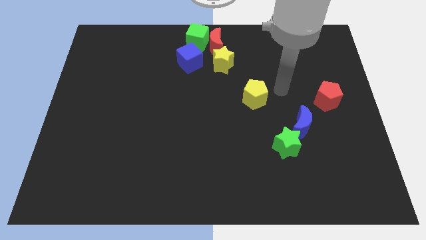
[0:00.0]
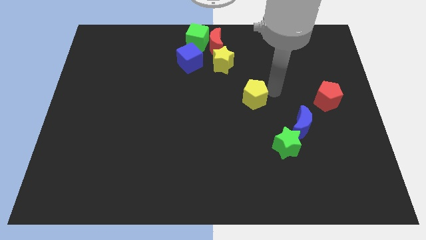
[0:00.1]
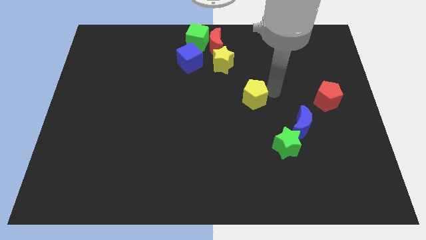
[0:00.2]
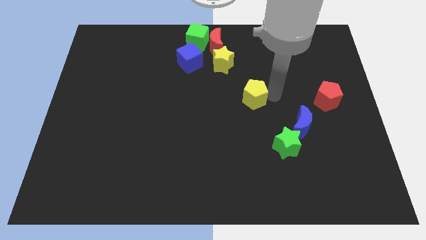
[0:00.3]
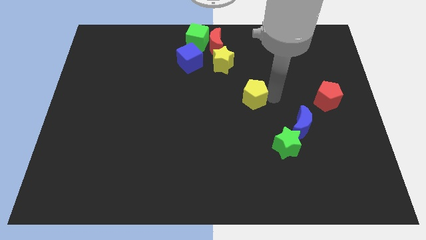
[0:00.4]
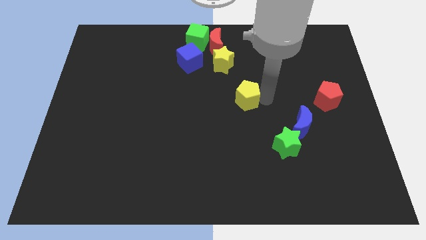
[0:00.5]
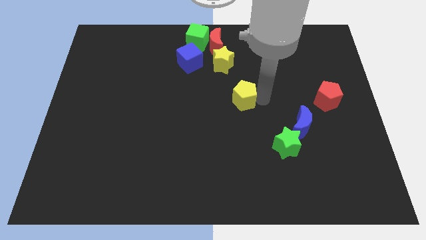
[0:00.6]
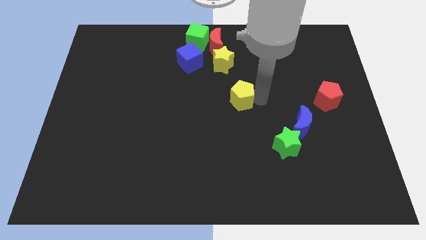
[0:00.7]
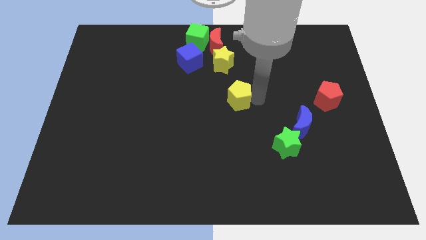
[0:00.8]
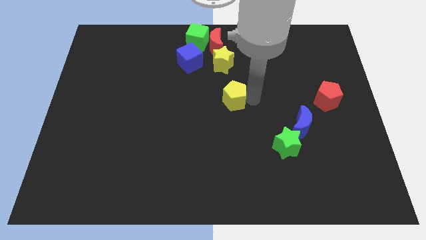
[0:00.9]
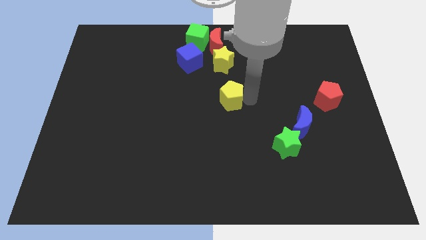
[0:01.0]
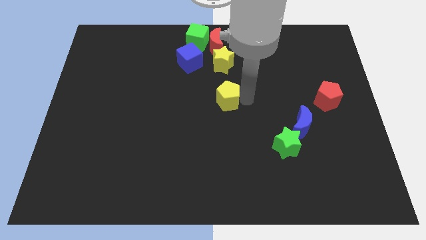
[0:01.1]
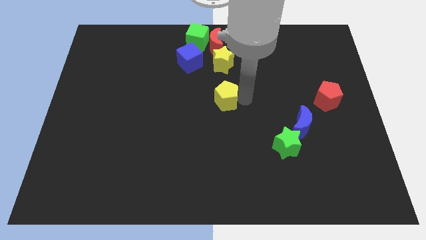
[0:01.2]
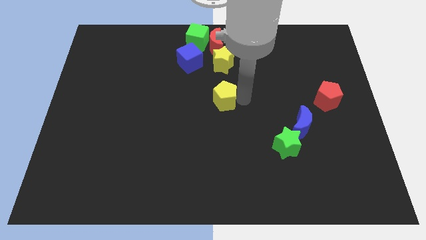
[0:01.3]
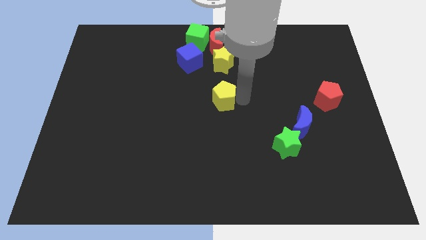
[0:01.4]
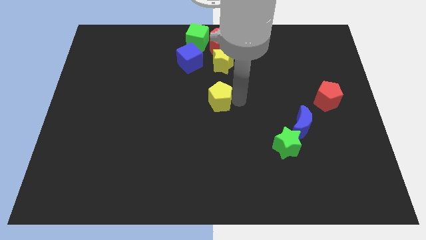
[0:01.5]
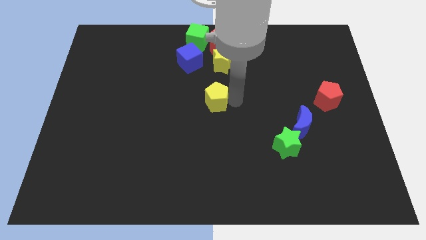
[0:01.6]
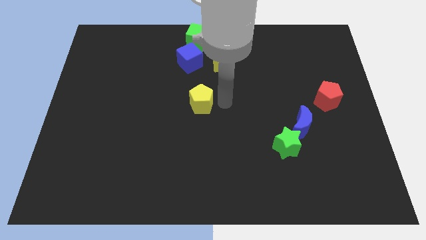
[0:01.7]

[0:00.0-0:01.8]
place yellow pentagon to the bottom of the yellow star

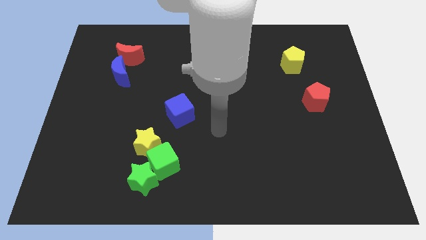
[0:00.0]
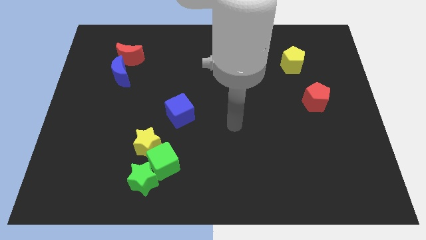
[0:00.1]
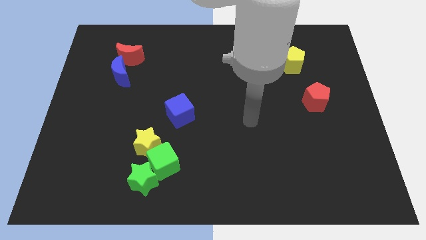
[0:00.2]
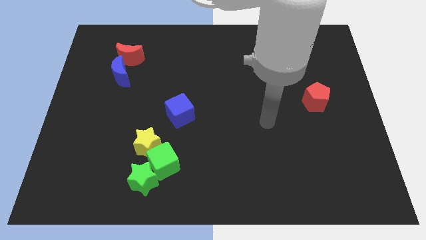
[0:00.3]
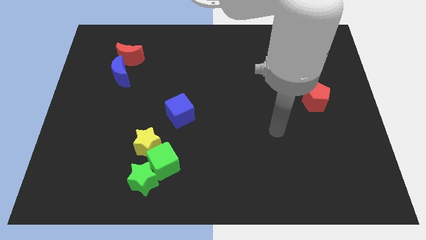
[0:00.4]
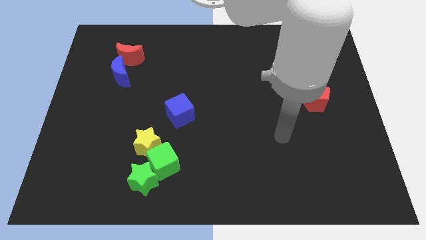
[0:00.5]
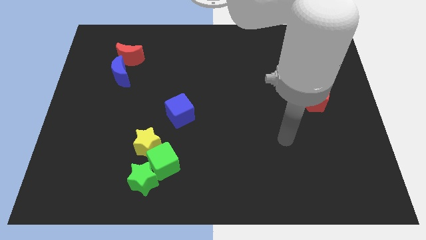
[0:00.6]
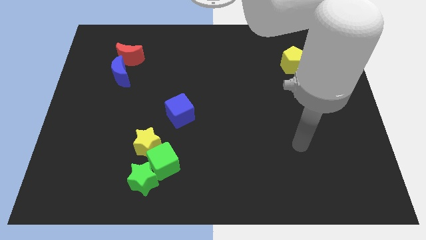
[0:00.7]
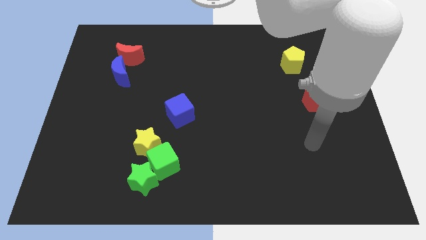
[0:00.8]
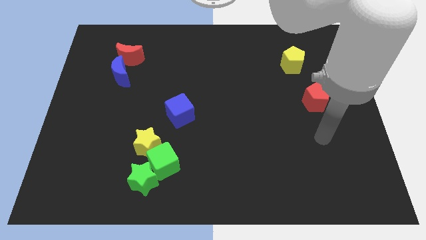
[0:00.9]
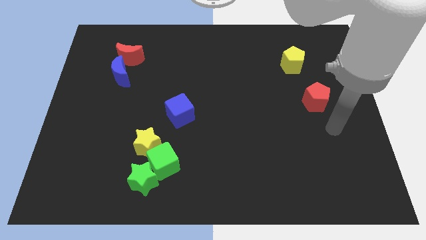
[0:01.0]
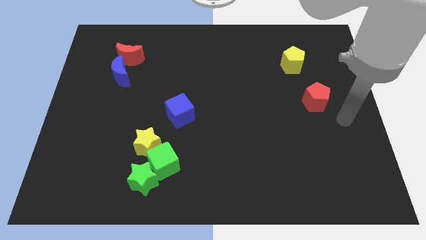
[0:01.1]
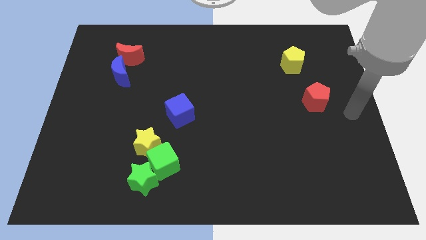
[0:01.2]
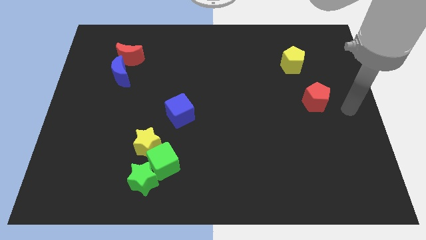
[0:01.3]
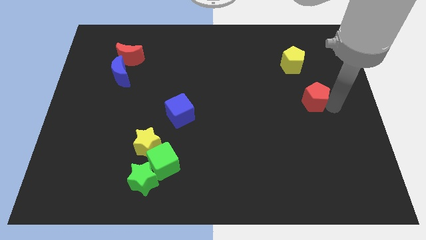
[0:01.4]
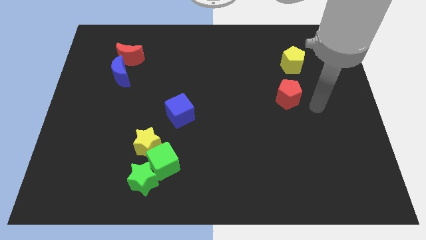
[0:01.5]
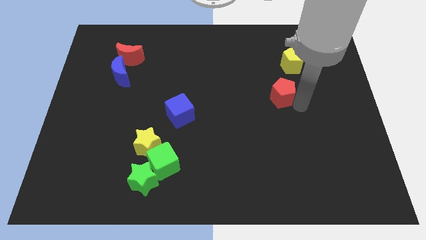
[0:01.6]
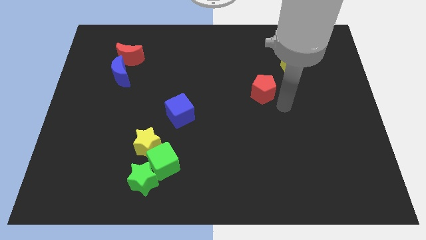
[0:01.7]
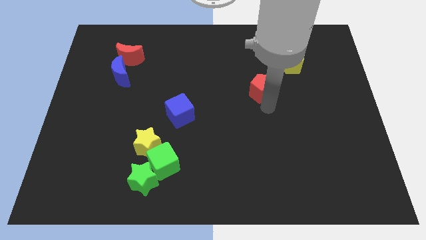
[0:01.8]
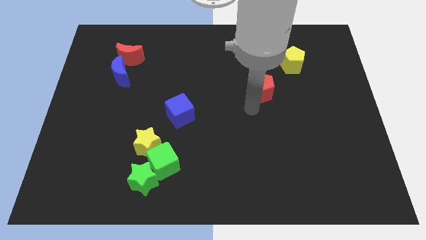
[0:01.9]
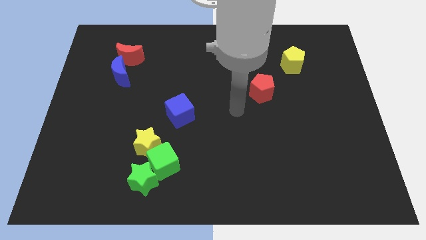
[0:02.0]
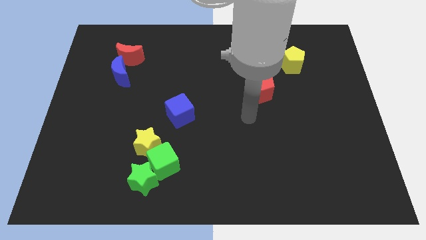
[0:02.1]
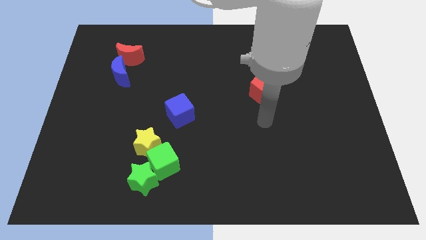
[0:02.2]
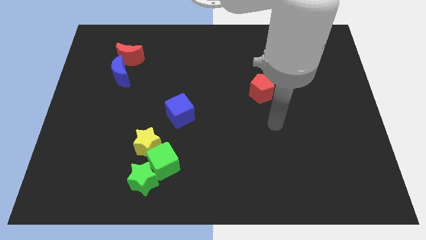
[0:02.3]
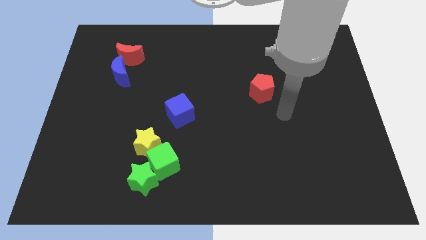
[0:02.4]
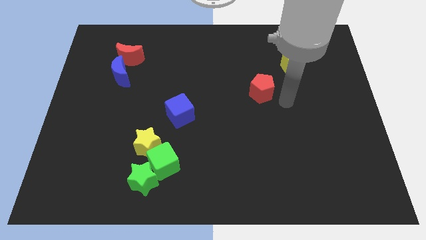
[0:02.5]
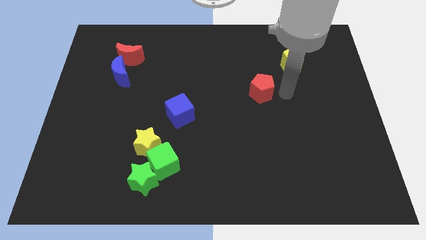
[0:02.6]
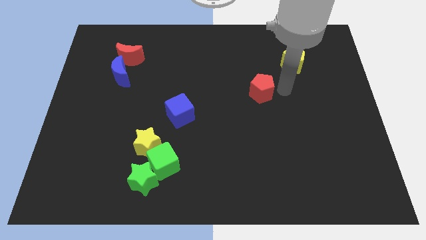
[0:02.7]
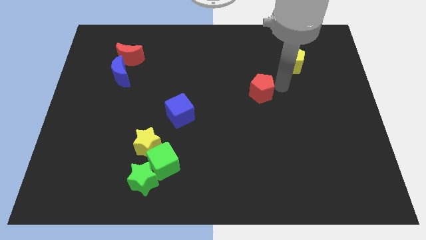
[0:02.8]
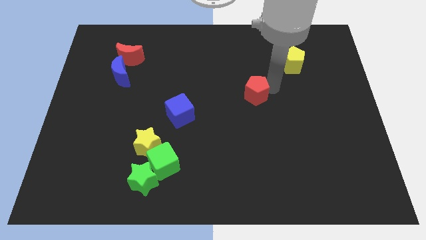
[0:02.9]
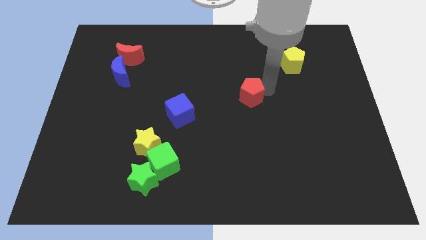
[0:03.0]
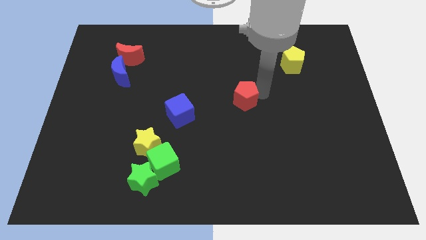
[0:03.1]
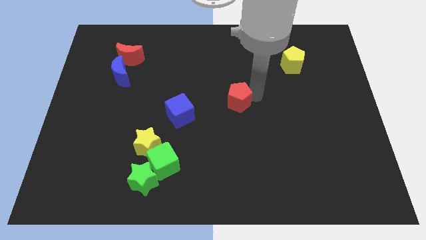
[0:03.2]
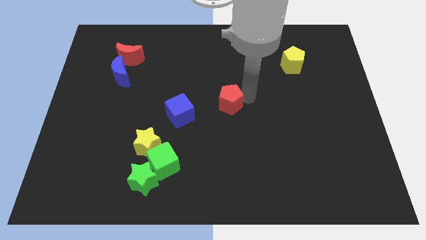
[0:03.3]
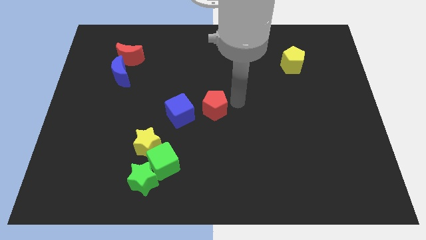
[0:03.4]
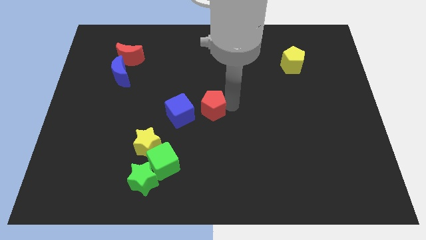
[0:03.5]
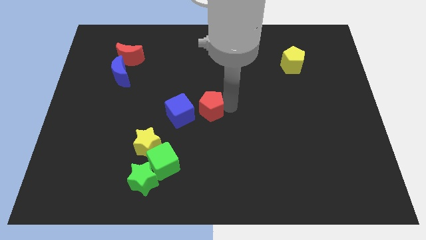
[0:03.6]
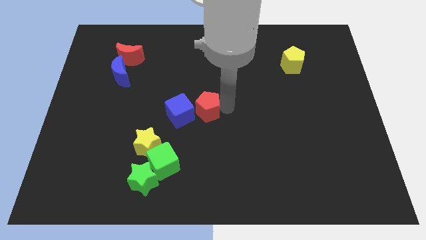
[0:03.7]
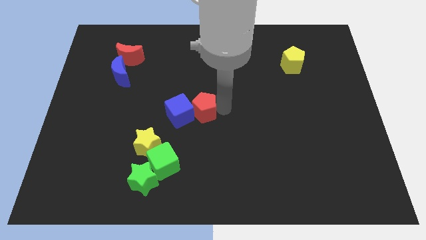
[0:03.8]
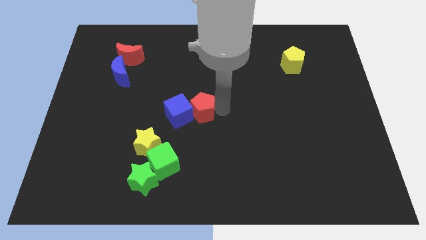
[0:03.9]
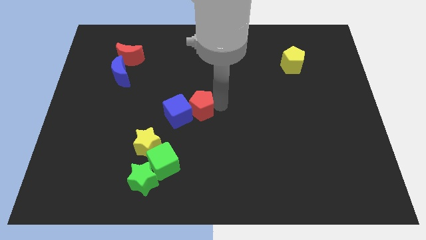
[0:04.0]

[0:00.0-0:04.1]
push red pentagon into blue cube

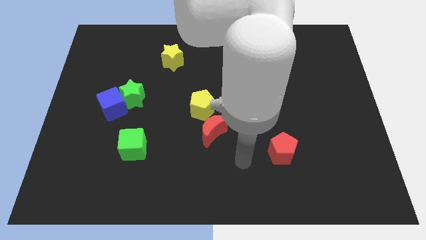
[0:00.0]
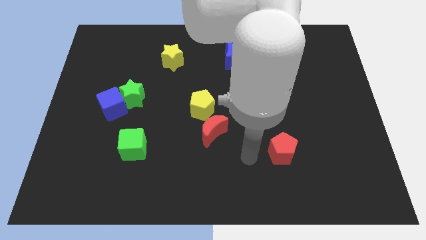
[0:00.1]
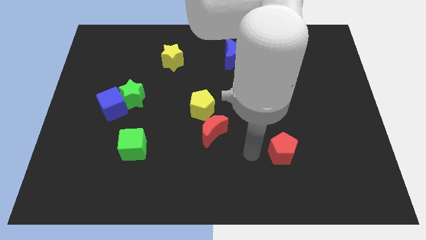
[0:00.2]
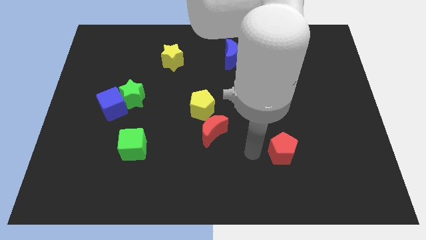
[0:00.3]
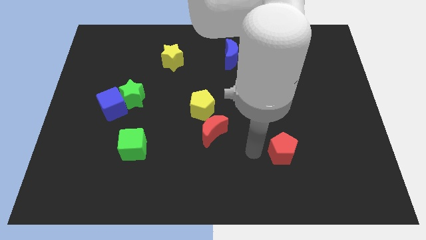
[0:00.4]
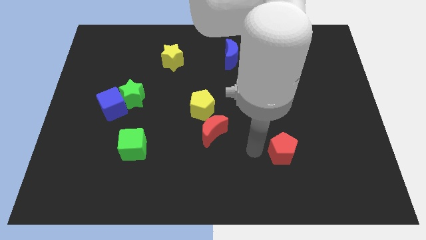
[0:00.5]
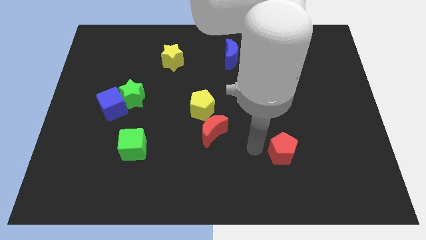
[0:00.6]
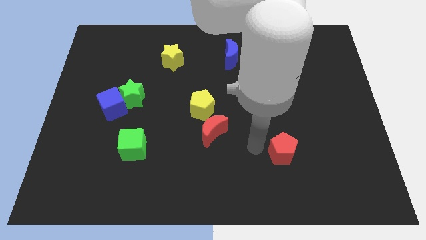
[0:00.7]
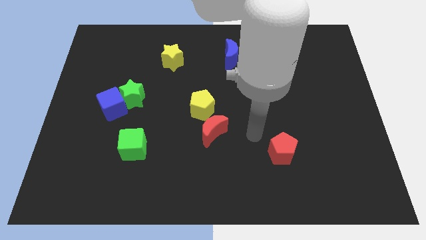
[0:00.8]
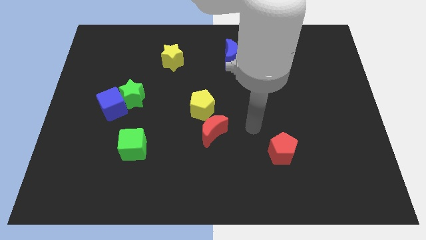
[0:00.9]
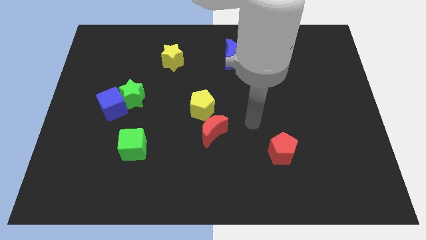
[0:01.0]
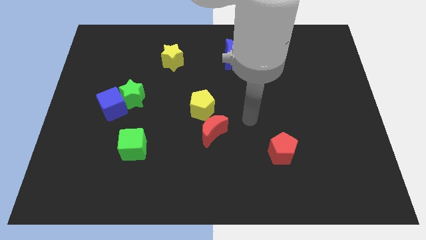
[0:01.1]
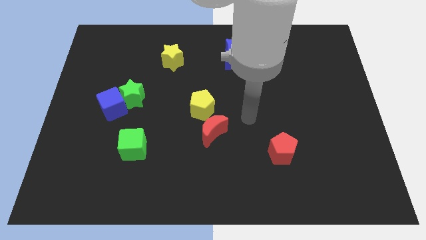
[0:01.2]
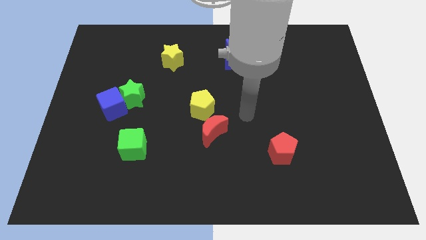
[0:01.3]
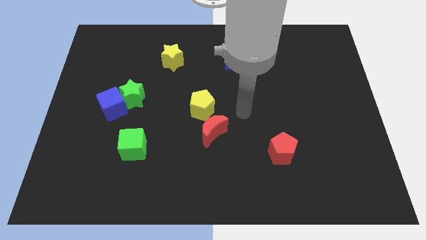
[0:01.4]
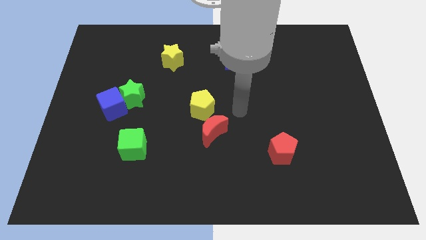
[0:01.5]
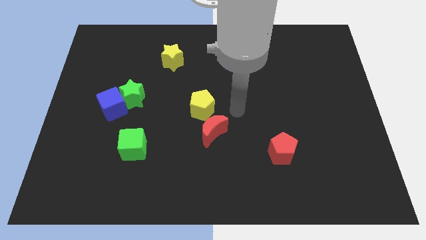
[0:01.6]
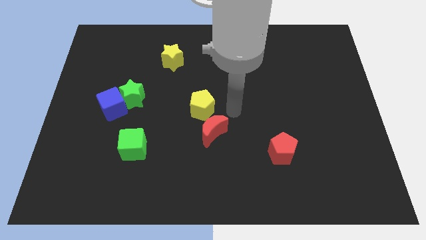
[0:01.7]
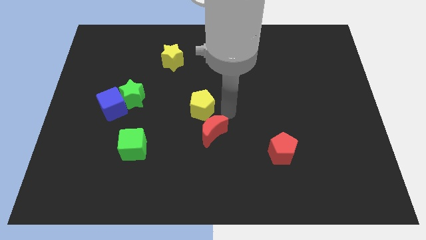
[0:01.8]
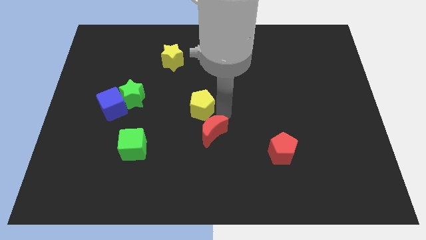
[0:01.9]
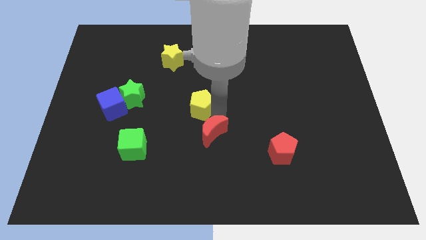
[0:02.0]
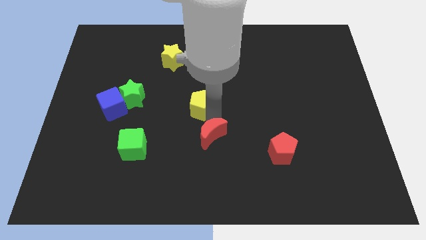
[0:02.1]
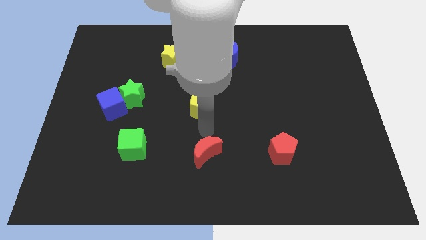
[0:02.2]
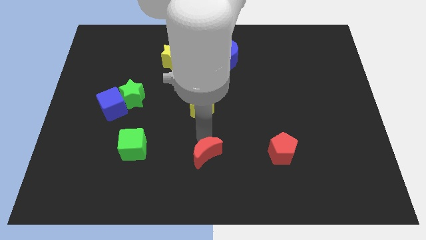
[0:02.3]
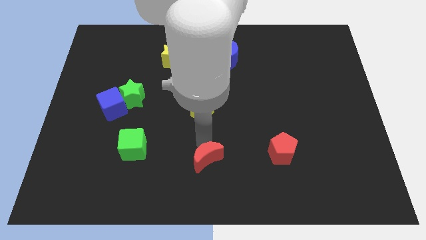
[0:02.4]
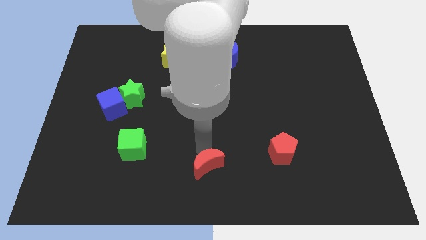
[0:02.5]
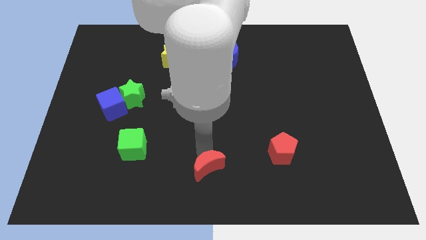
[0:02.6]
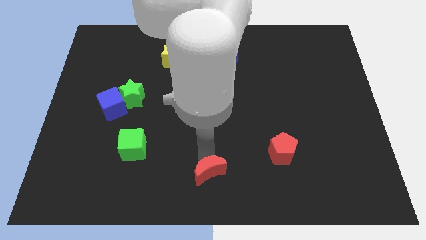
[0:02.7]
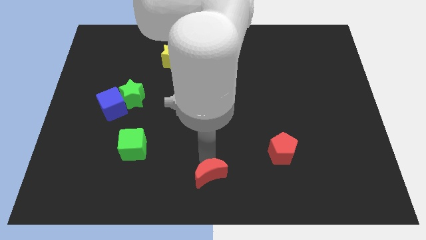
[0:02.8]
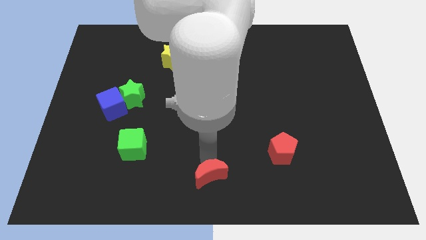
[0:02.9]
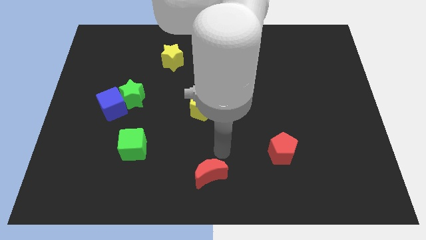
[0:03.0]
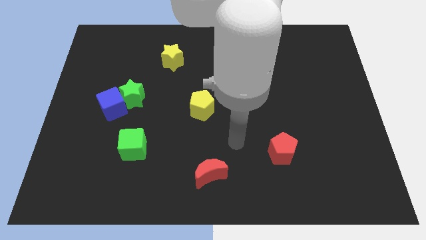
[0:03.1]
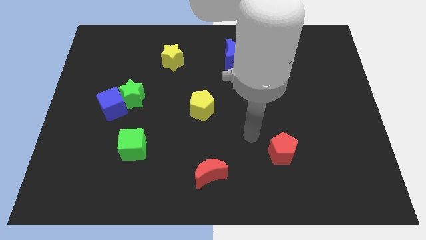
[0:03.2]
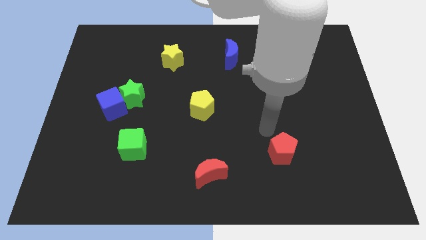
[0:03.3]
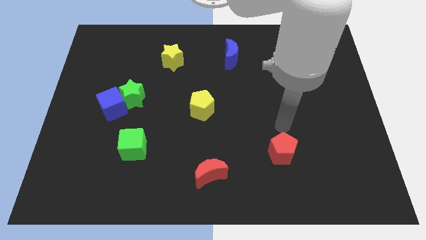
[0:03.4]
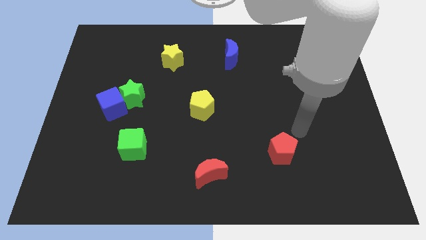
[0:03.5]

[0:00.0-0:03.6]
move red moon below the yellow pentagon
